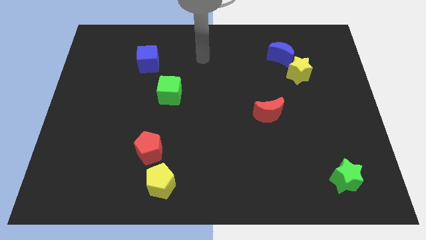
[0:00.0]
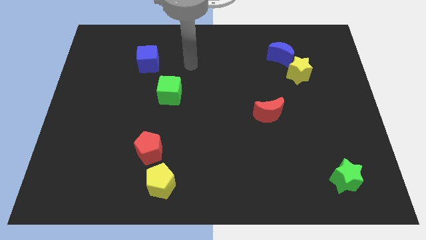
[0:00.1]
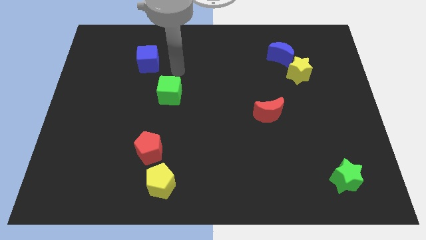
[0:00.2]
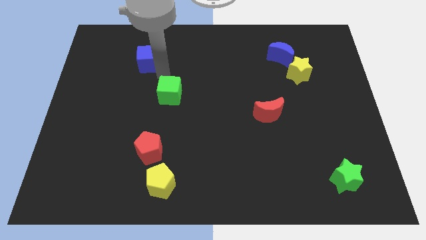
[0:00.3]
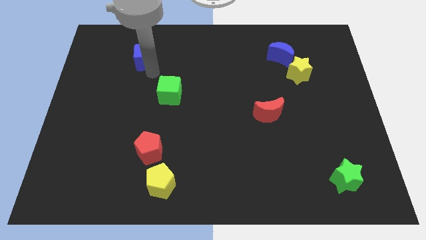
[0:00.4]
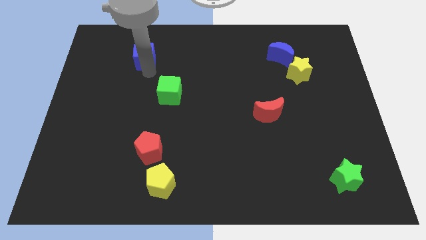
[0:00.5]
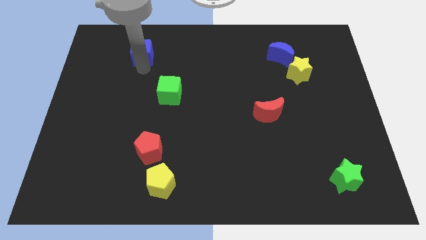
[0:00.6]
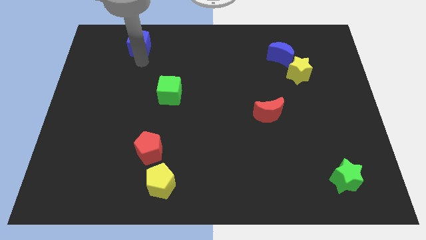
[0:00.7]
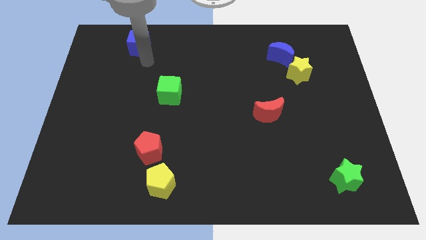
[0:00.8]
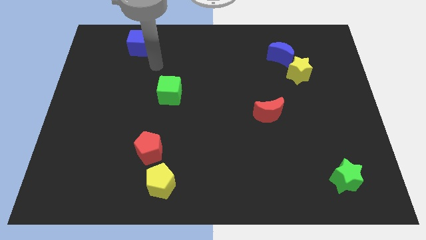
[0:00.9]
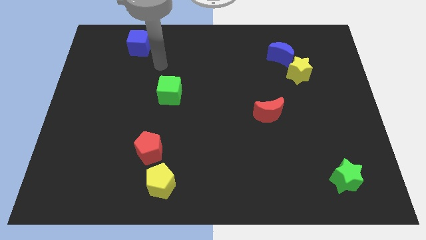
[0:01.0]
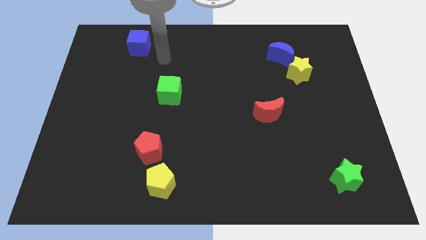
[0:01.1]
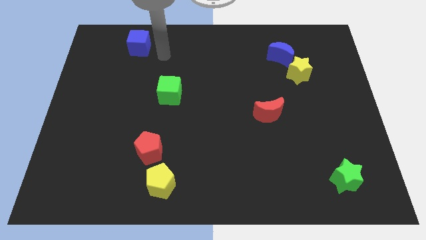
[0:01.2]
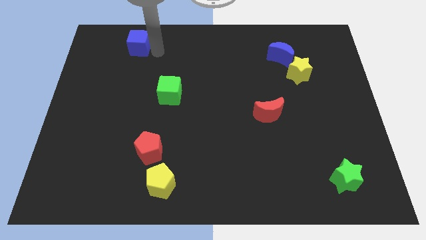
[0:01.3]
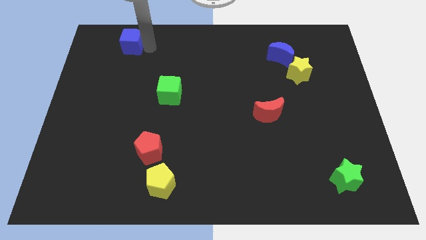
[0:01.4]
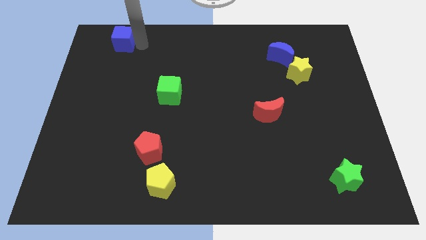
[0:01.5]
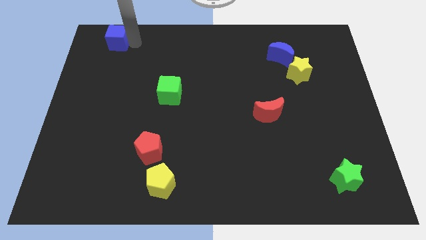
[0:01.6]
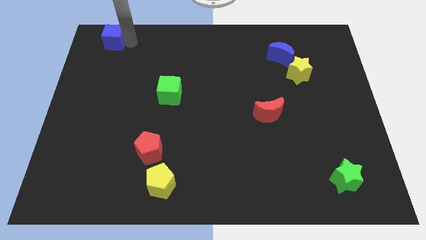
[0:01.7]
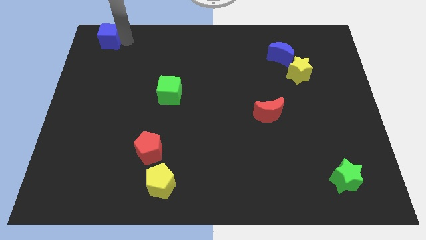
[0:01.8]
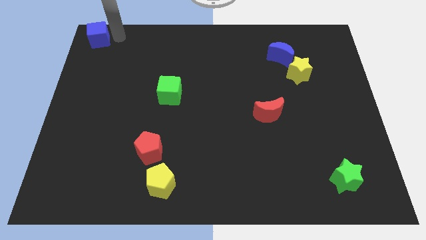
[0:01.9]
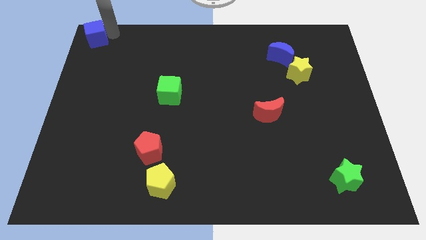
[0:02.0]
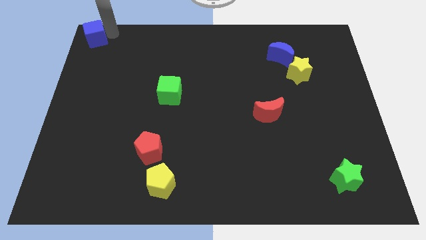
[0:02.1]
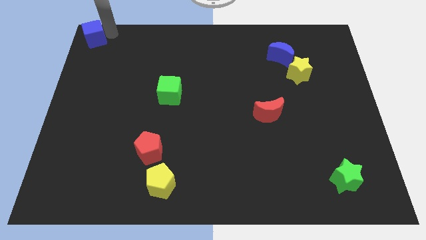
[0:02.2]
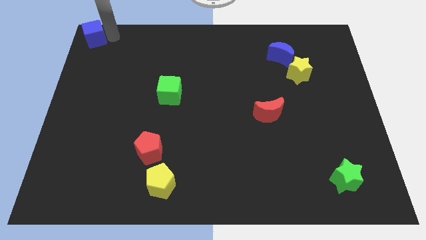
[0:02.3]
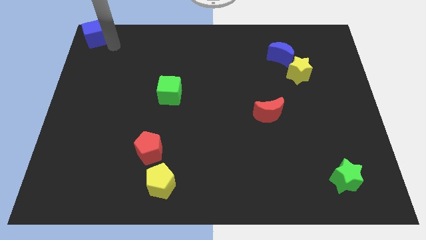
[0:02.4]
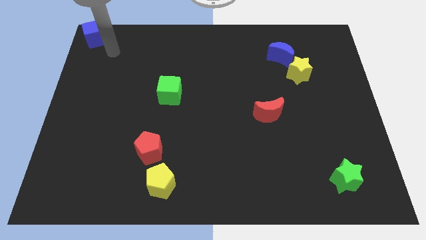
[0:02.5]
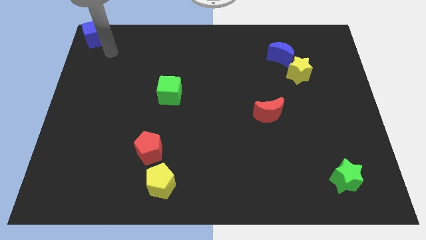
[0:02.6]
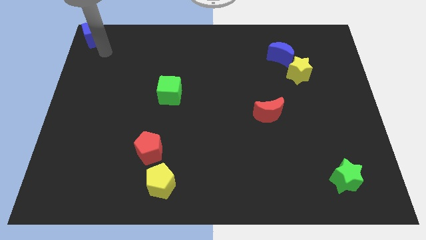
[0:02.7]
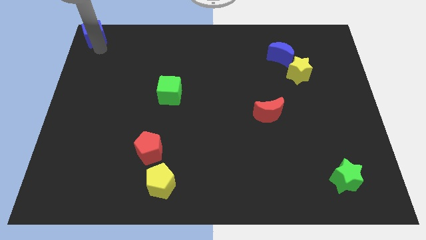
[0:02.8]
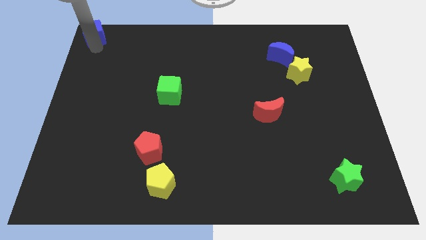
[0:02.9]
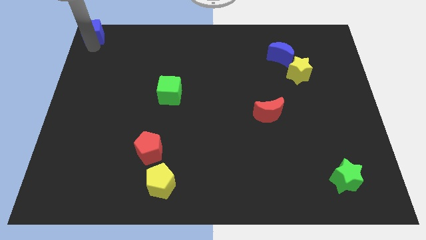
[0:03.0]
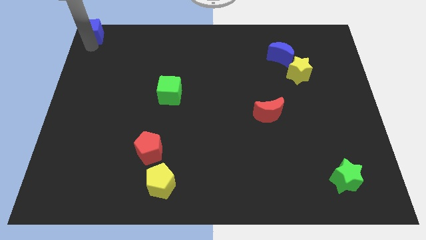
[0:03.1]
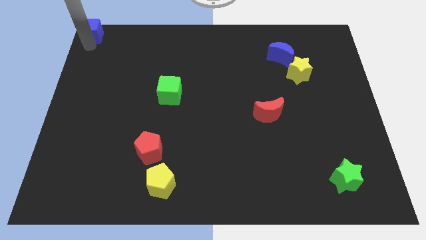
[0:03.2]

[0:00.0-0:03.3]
move the blue cube to the top left corner of the board

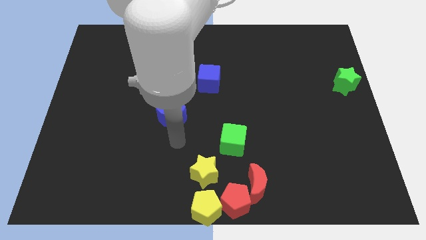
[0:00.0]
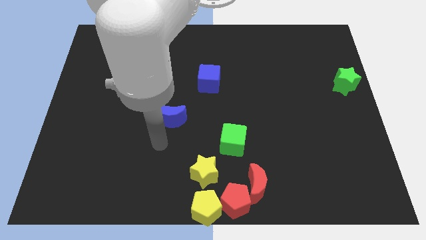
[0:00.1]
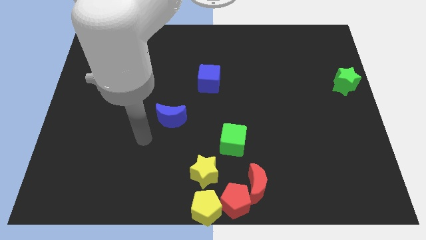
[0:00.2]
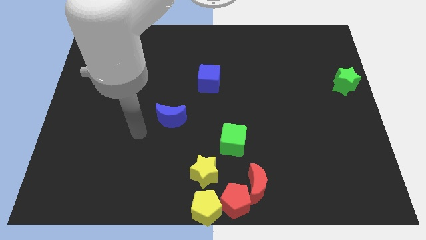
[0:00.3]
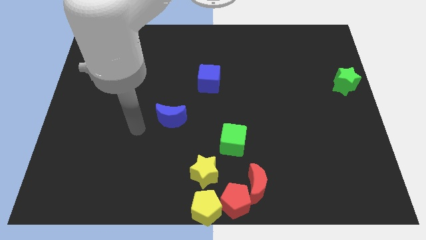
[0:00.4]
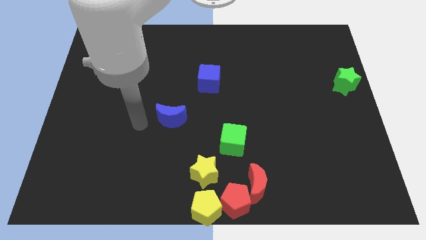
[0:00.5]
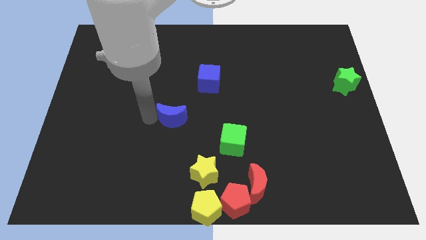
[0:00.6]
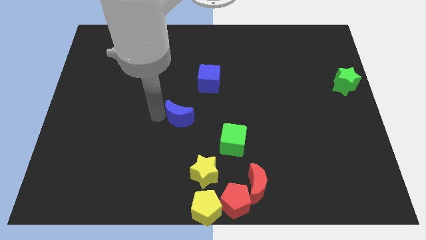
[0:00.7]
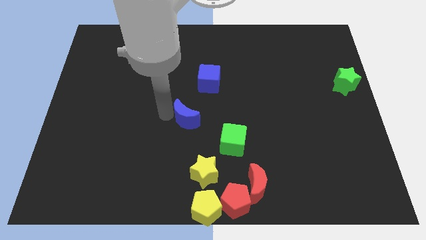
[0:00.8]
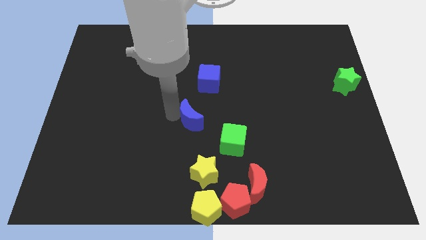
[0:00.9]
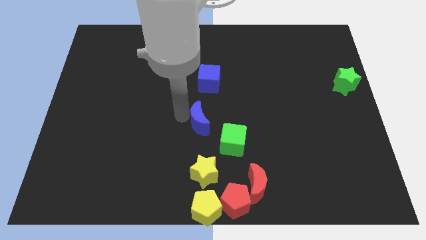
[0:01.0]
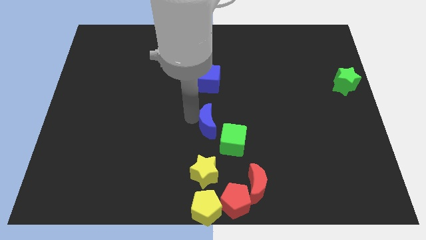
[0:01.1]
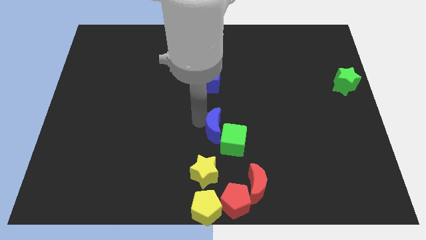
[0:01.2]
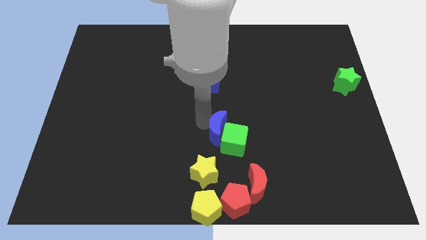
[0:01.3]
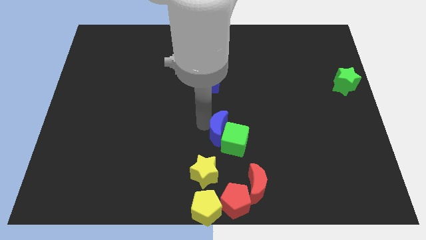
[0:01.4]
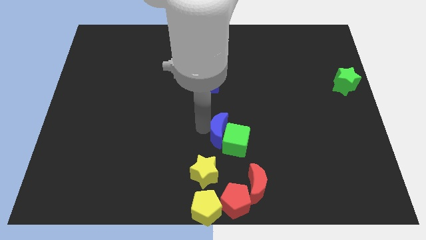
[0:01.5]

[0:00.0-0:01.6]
move the blue moon into the green cube

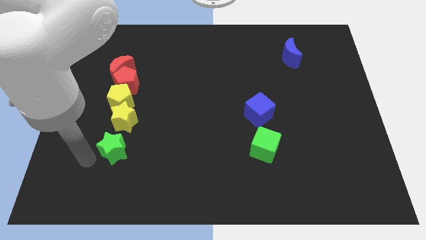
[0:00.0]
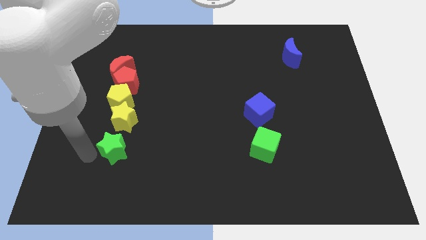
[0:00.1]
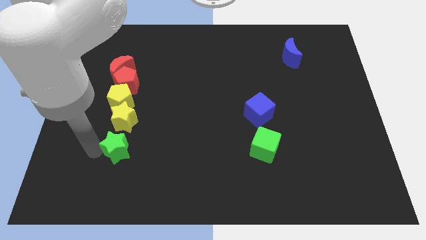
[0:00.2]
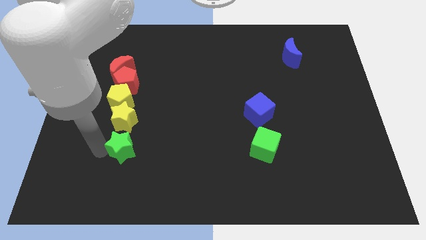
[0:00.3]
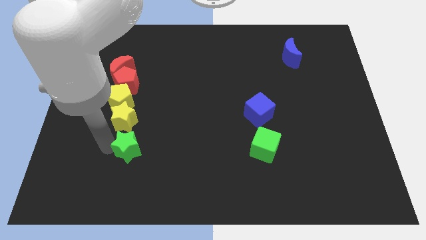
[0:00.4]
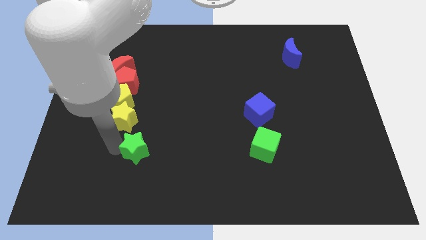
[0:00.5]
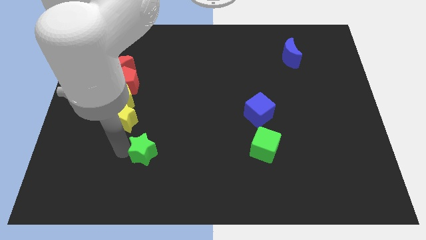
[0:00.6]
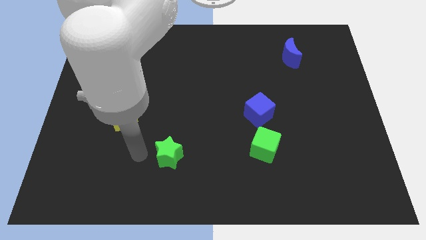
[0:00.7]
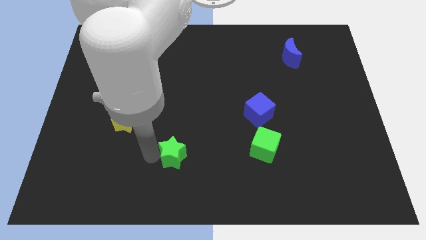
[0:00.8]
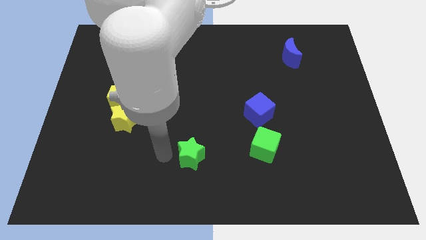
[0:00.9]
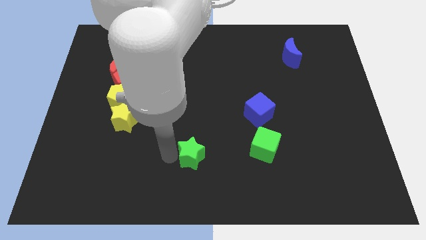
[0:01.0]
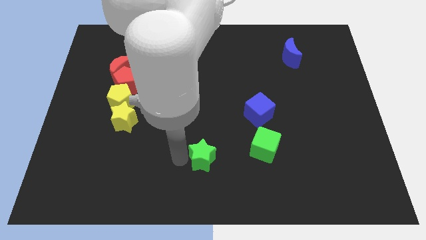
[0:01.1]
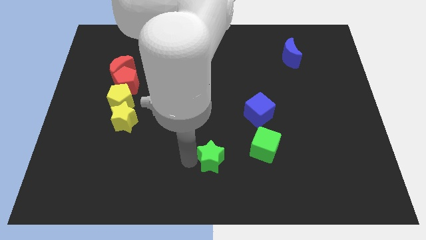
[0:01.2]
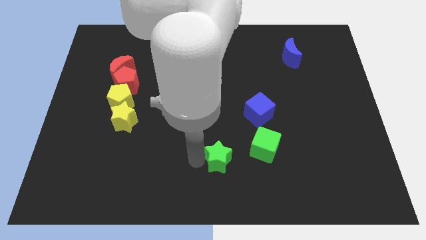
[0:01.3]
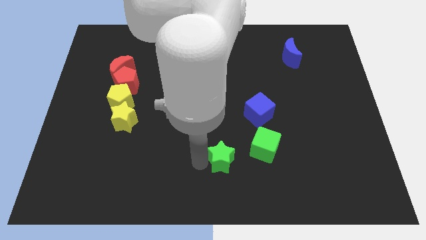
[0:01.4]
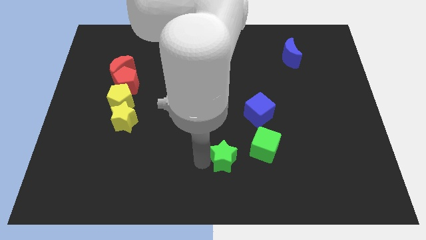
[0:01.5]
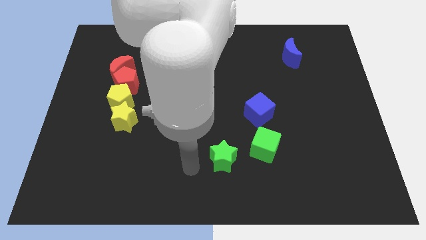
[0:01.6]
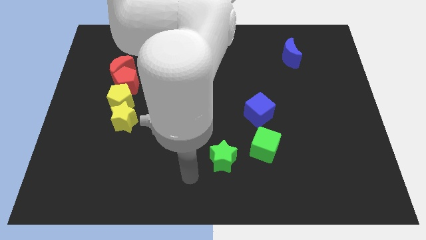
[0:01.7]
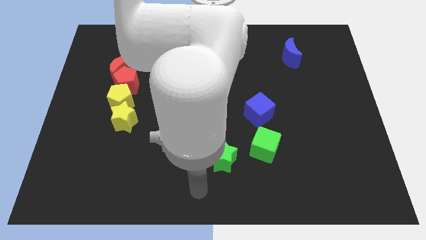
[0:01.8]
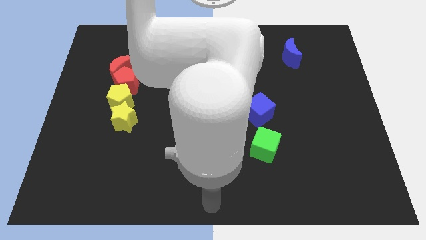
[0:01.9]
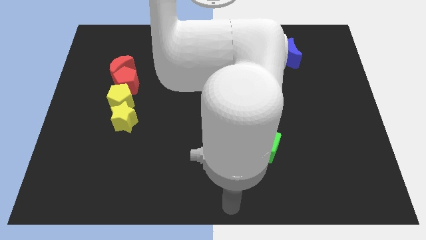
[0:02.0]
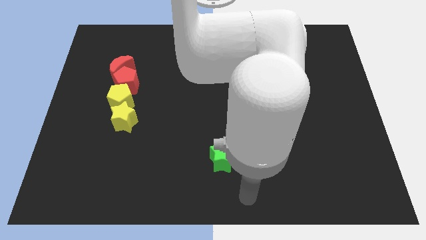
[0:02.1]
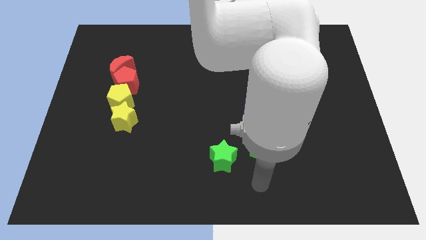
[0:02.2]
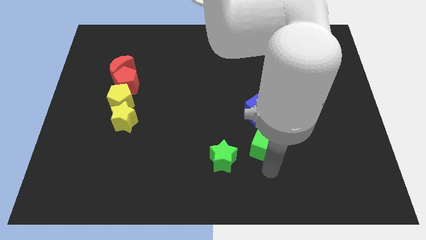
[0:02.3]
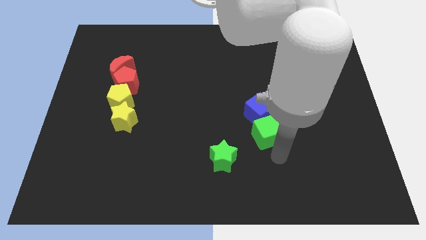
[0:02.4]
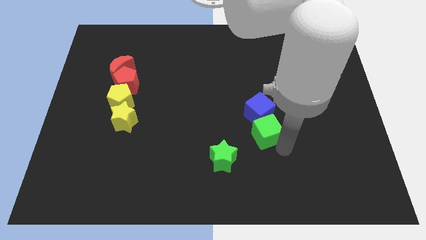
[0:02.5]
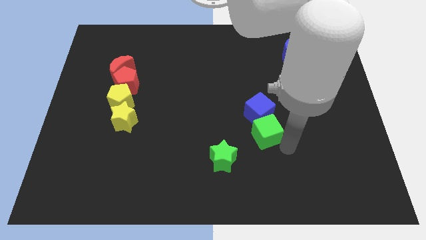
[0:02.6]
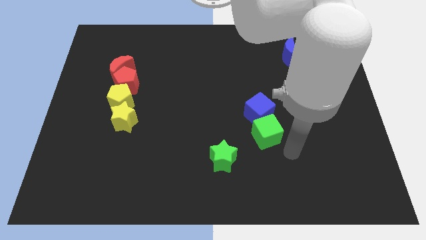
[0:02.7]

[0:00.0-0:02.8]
place green star towards the green cube

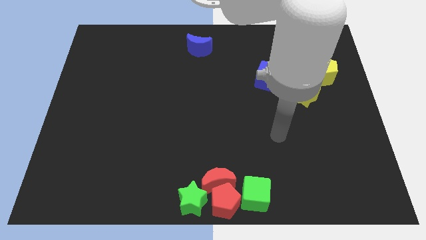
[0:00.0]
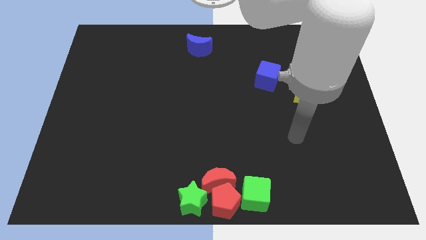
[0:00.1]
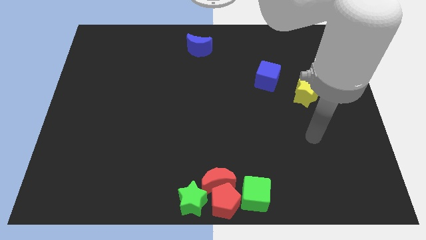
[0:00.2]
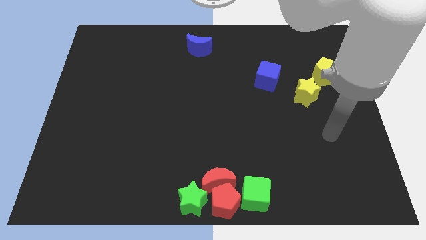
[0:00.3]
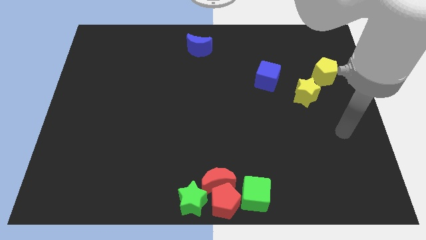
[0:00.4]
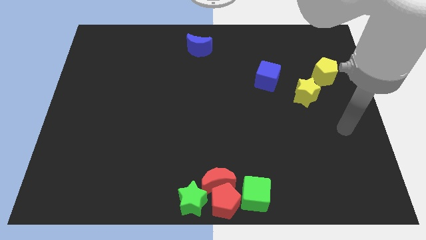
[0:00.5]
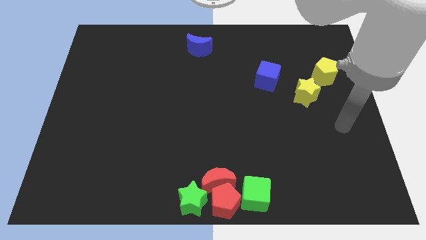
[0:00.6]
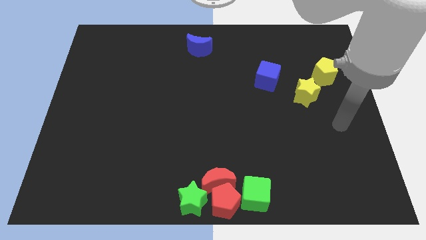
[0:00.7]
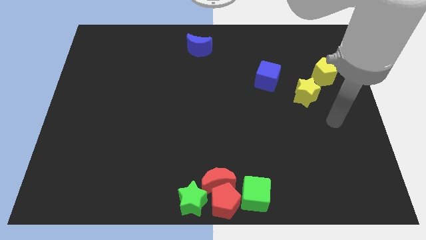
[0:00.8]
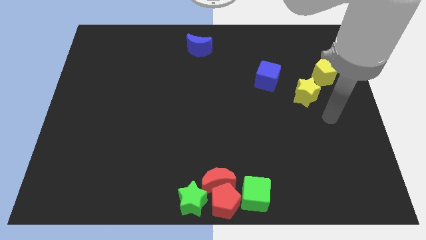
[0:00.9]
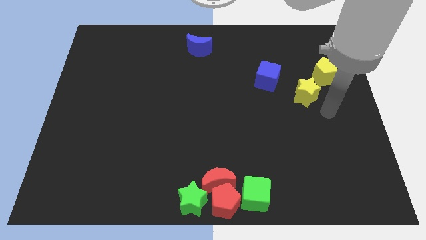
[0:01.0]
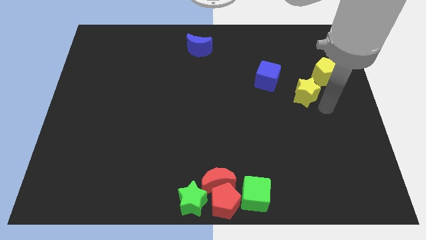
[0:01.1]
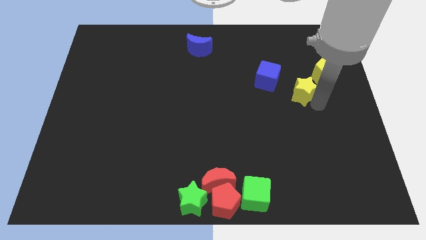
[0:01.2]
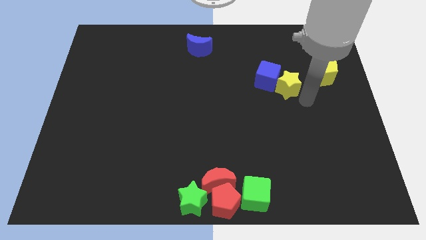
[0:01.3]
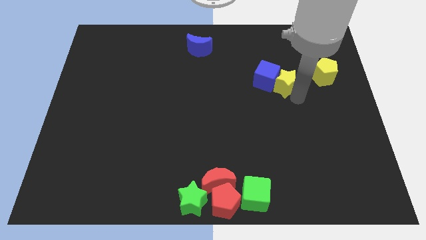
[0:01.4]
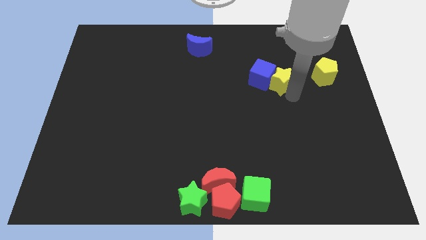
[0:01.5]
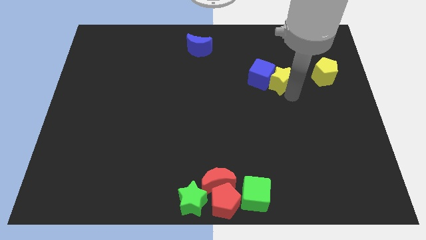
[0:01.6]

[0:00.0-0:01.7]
push the yellow star into the blue cube
